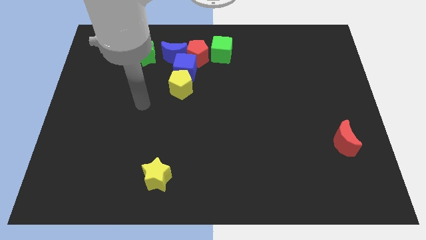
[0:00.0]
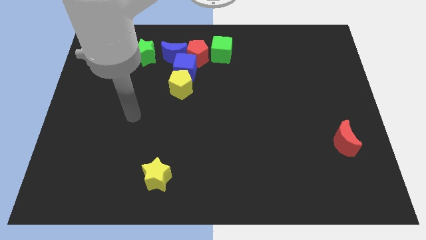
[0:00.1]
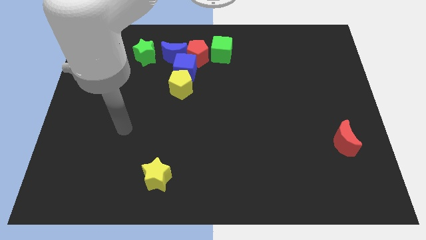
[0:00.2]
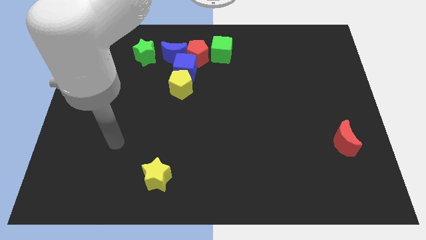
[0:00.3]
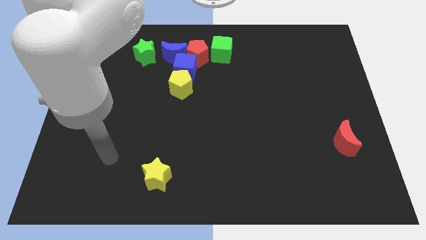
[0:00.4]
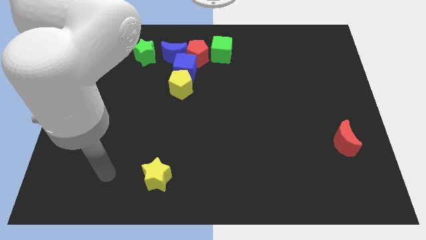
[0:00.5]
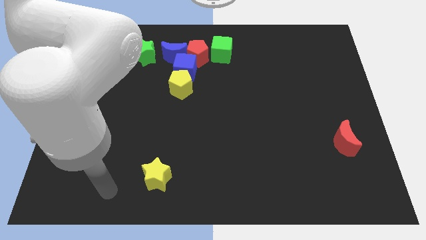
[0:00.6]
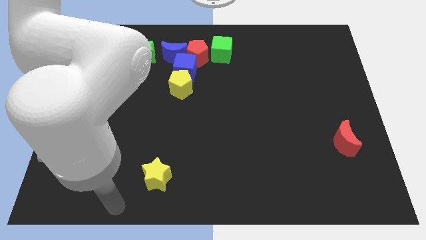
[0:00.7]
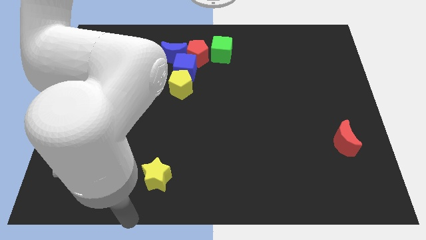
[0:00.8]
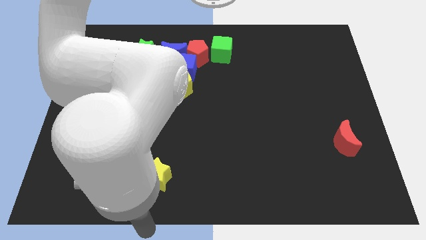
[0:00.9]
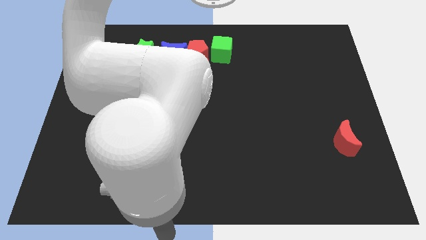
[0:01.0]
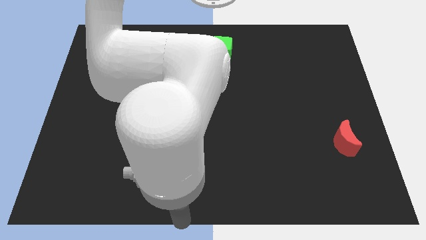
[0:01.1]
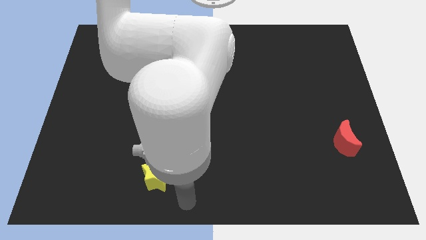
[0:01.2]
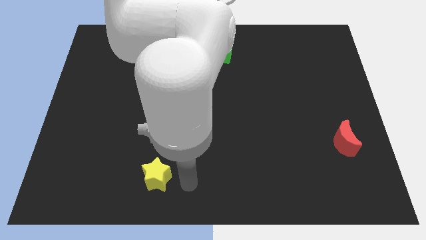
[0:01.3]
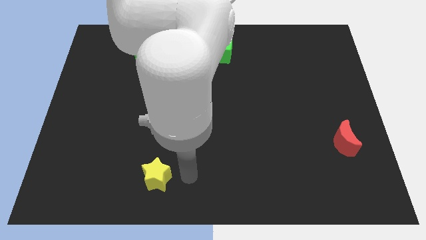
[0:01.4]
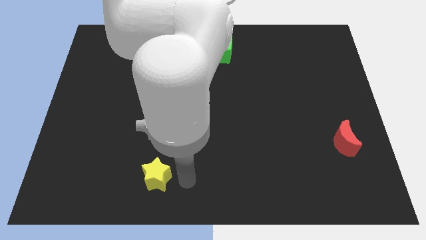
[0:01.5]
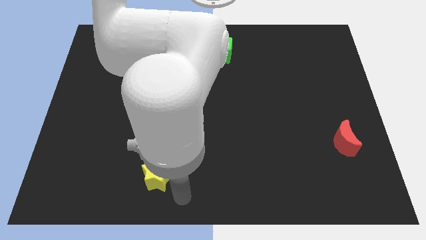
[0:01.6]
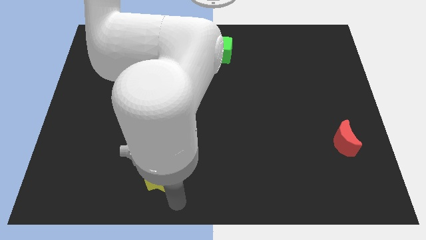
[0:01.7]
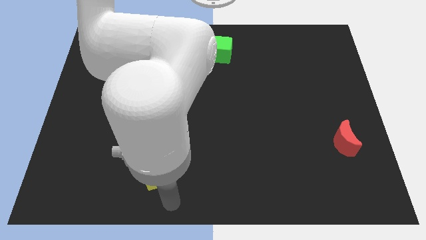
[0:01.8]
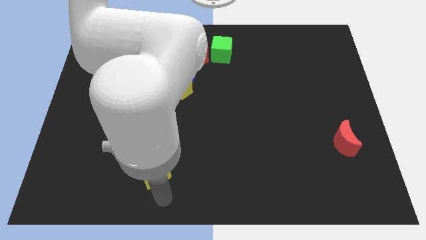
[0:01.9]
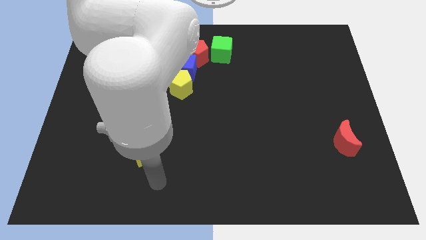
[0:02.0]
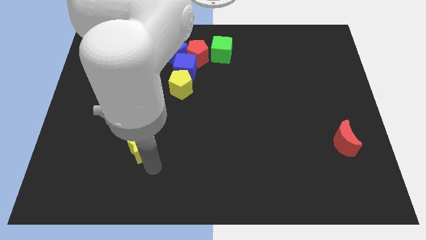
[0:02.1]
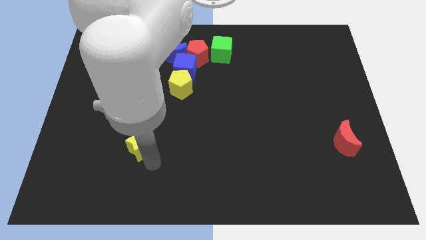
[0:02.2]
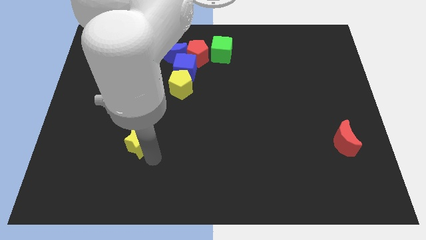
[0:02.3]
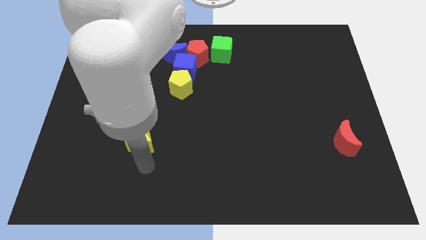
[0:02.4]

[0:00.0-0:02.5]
slightly move the yellow star towards the left center of the board

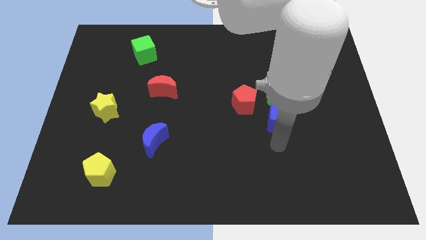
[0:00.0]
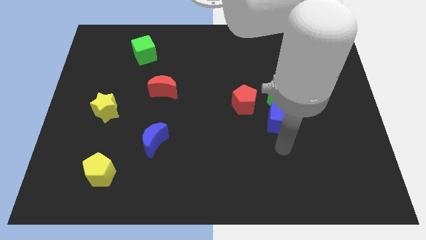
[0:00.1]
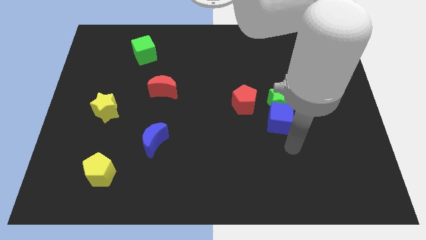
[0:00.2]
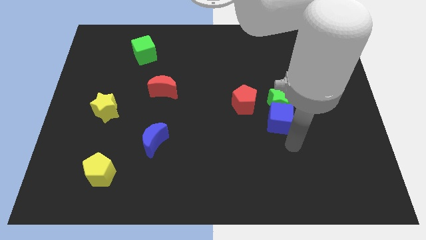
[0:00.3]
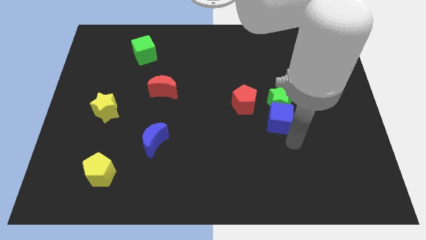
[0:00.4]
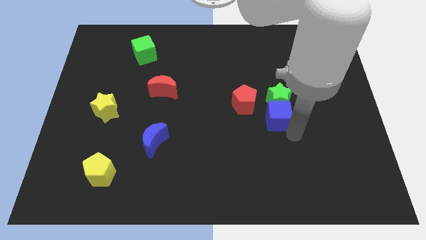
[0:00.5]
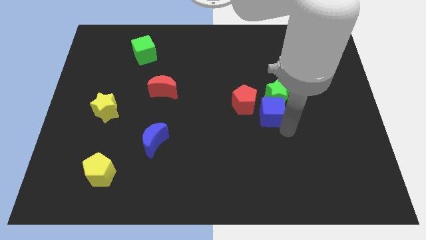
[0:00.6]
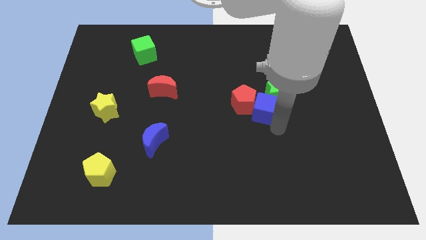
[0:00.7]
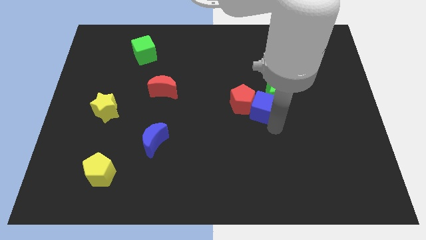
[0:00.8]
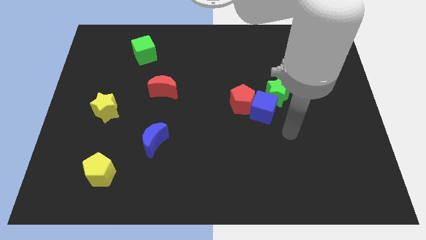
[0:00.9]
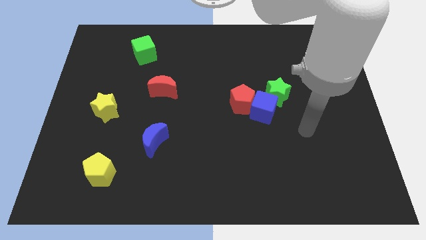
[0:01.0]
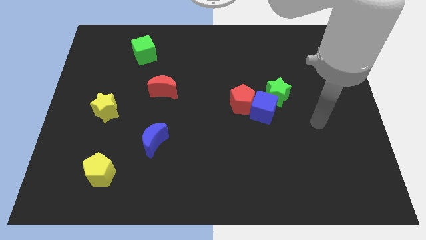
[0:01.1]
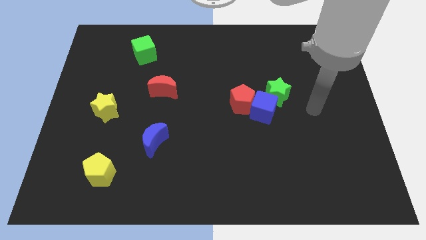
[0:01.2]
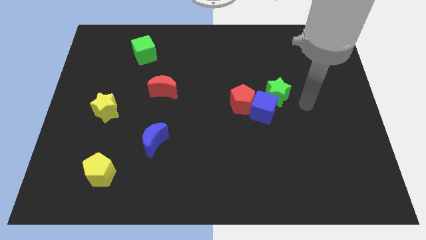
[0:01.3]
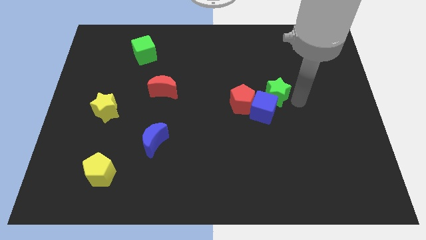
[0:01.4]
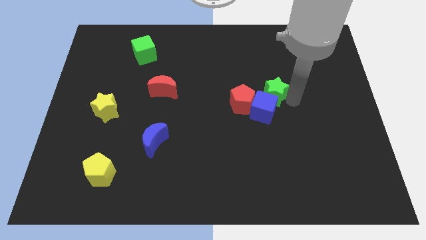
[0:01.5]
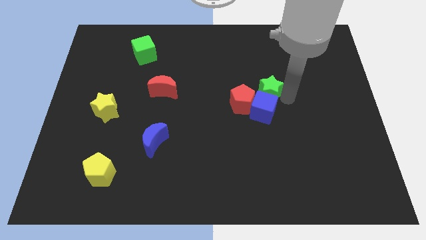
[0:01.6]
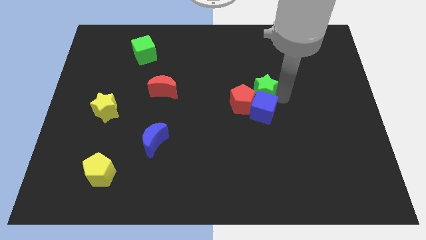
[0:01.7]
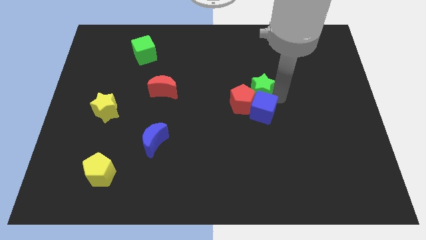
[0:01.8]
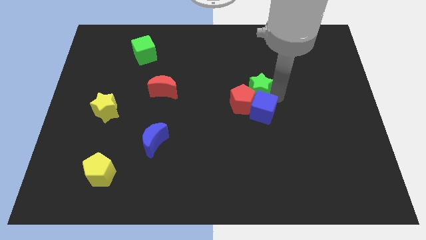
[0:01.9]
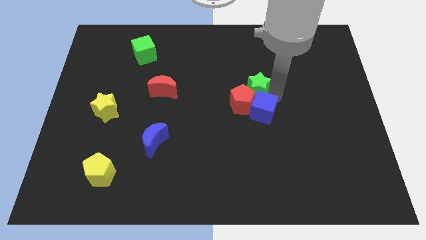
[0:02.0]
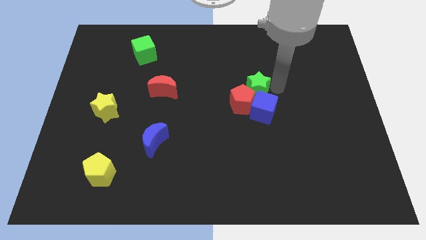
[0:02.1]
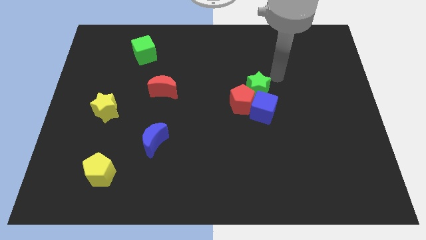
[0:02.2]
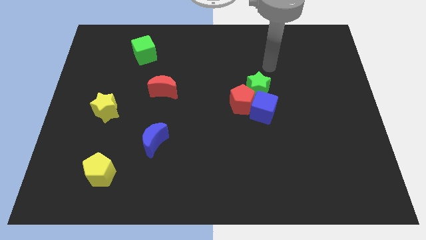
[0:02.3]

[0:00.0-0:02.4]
push the blue cube and green star into the red pentagon

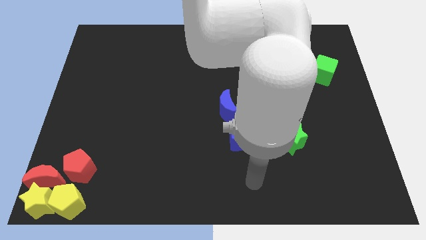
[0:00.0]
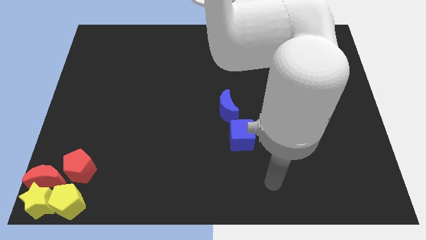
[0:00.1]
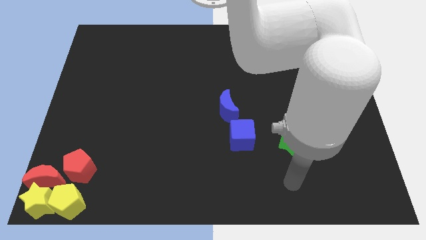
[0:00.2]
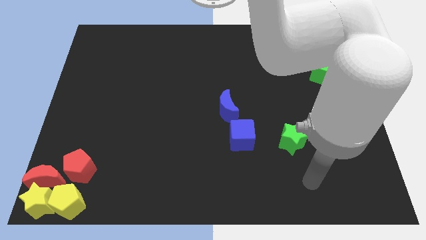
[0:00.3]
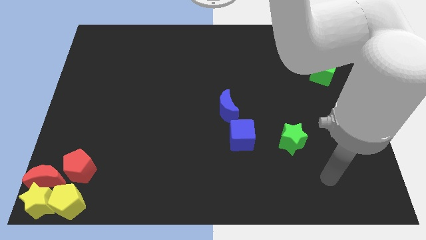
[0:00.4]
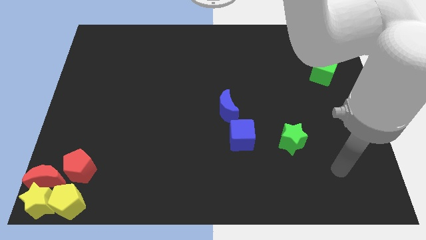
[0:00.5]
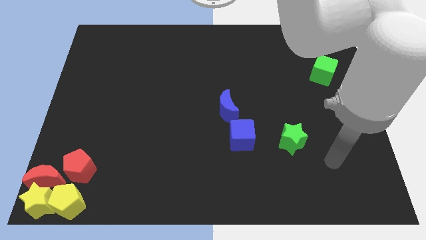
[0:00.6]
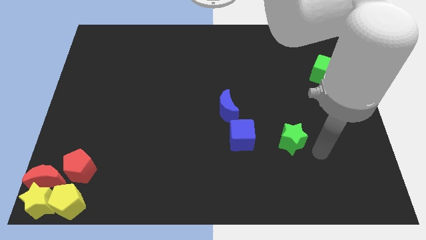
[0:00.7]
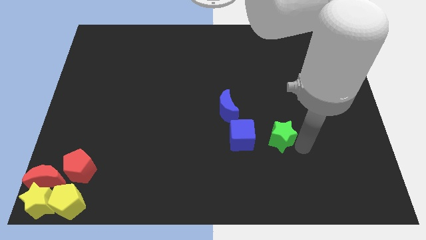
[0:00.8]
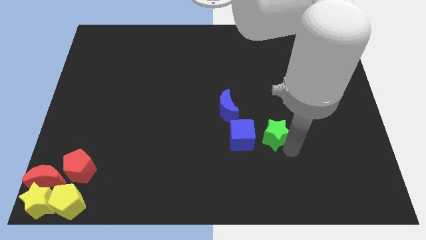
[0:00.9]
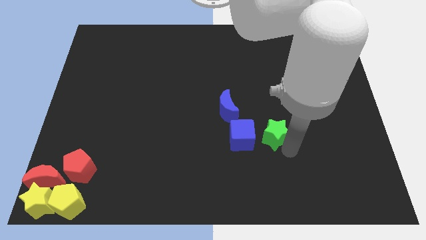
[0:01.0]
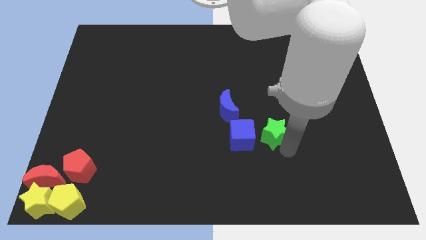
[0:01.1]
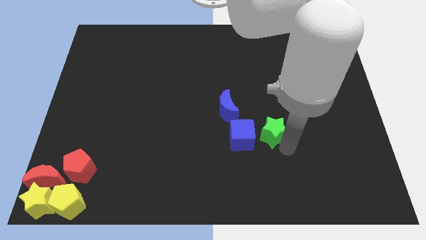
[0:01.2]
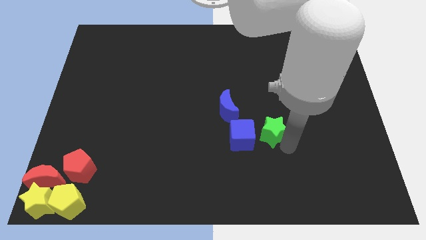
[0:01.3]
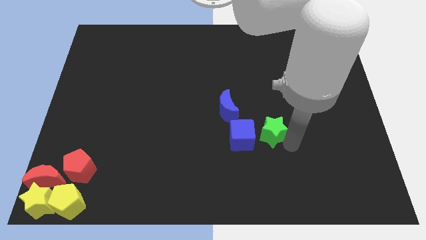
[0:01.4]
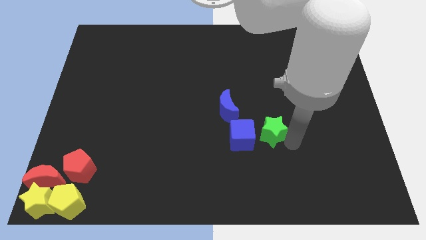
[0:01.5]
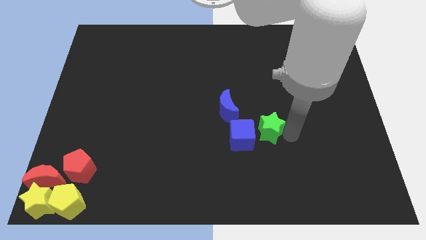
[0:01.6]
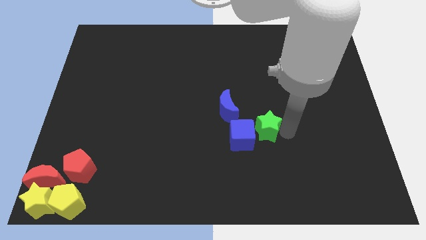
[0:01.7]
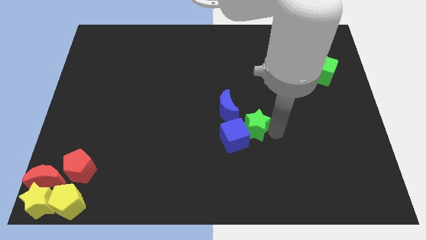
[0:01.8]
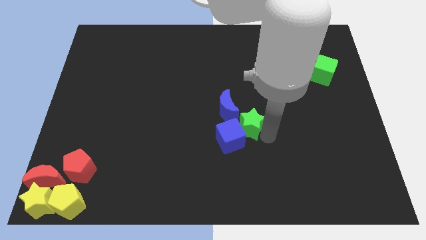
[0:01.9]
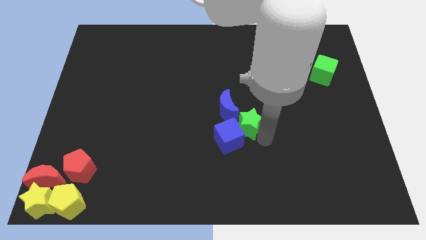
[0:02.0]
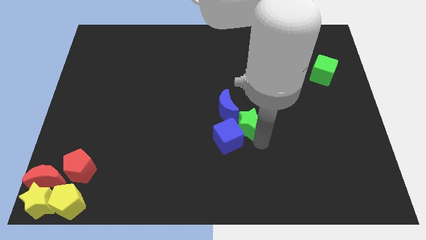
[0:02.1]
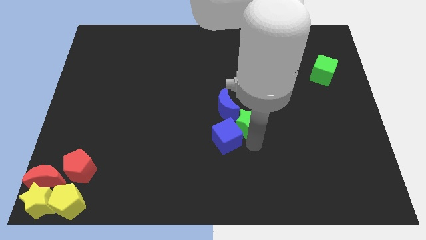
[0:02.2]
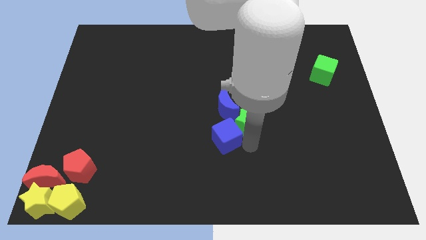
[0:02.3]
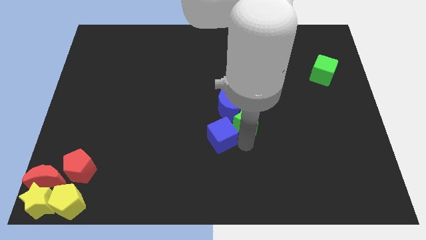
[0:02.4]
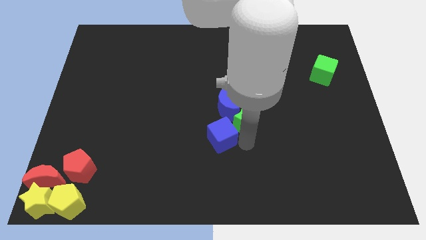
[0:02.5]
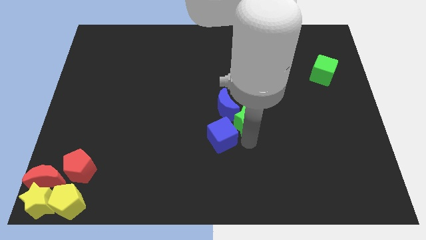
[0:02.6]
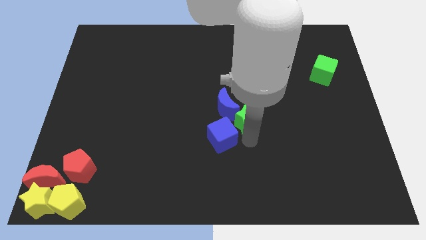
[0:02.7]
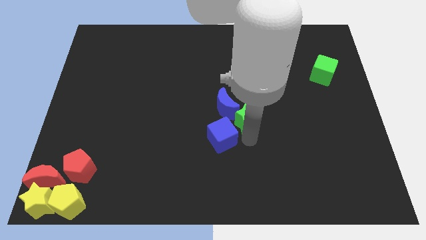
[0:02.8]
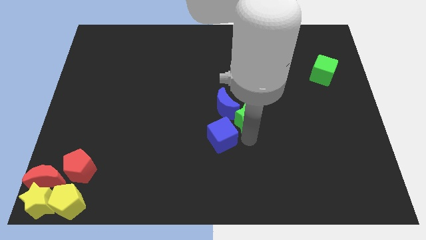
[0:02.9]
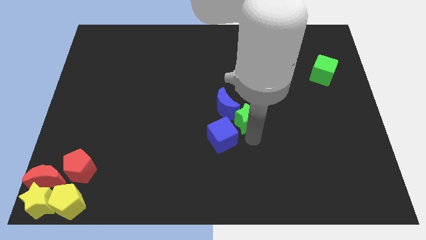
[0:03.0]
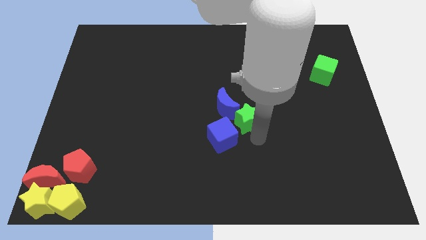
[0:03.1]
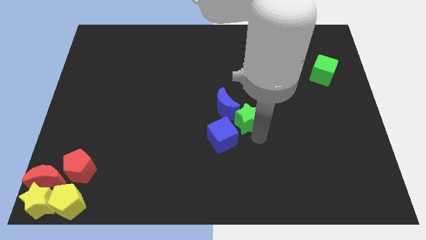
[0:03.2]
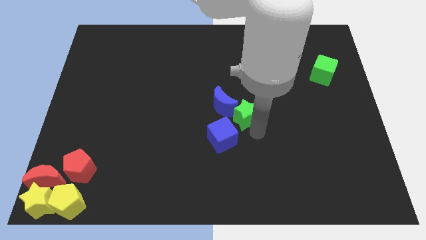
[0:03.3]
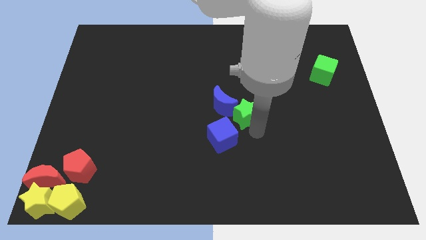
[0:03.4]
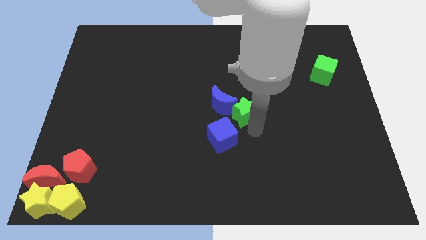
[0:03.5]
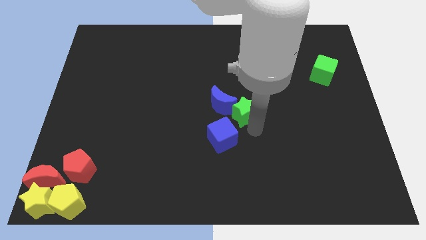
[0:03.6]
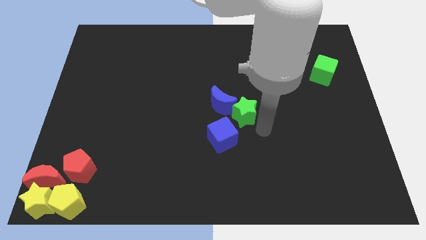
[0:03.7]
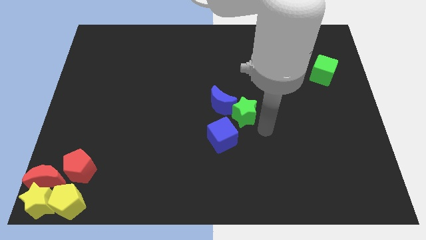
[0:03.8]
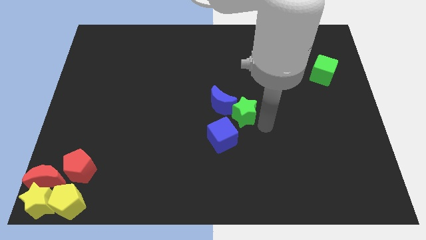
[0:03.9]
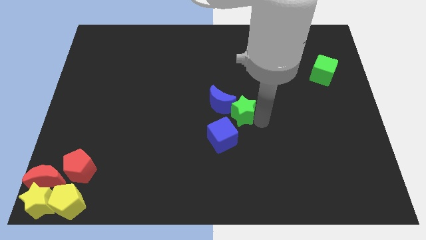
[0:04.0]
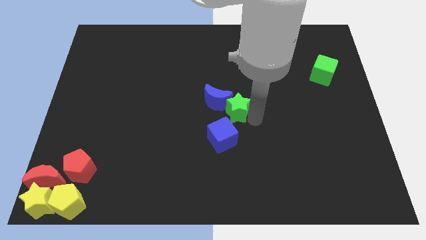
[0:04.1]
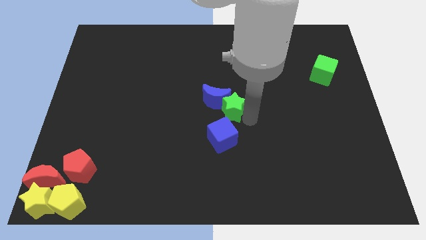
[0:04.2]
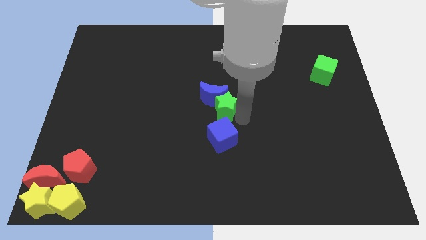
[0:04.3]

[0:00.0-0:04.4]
push the green star into the blue moon
